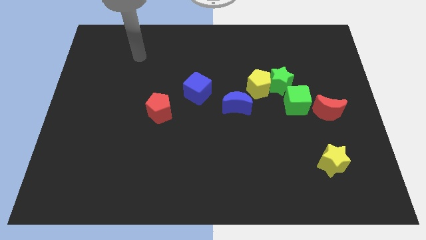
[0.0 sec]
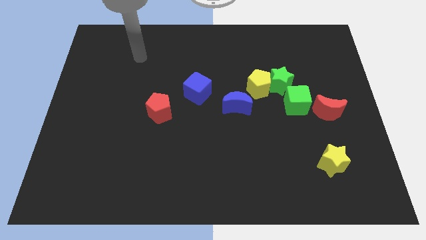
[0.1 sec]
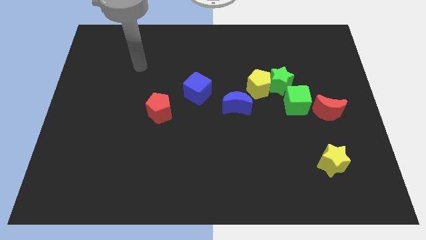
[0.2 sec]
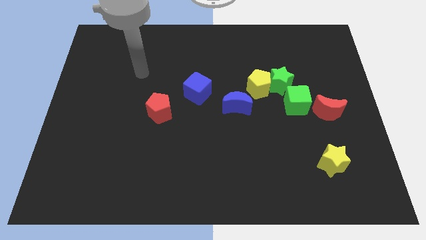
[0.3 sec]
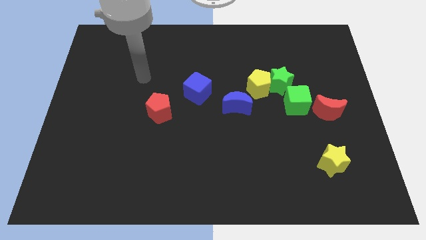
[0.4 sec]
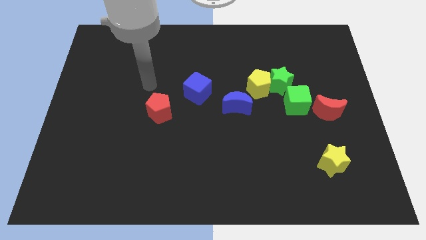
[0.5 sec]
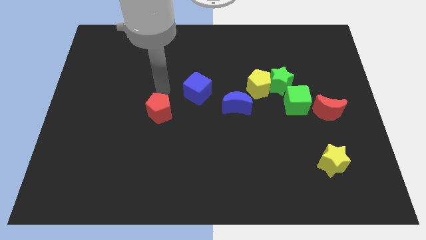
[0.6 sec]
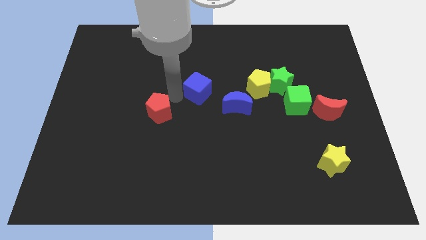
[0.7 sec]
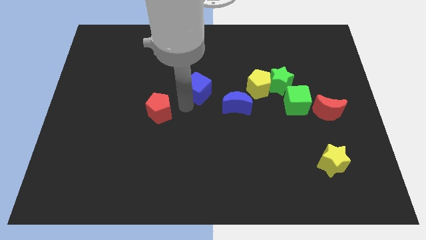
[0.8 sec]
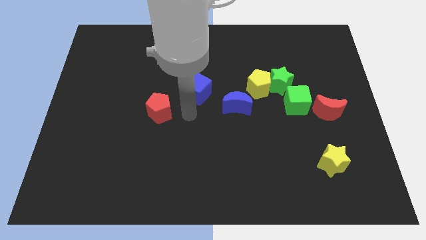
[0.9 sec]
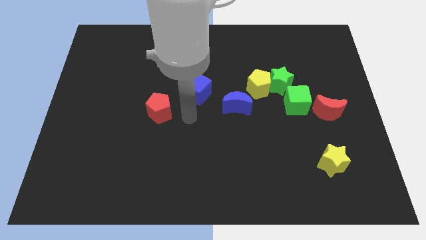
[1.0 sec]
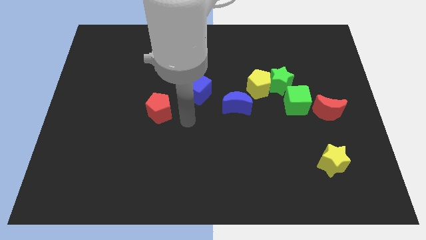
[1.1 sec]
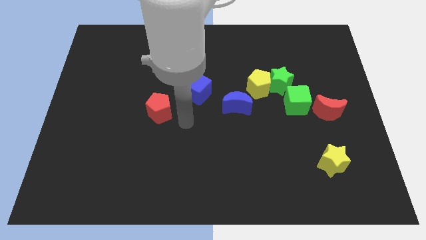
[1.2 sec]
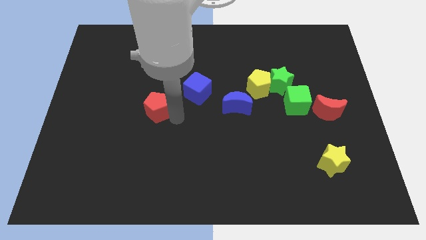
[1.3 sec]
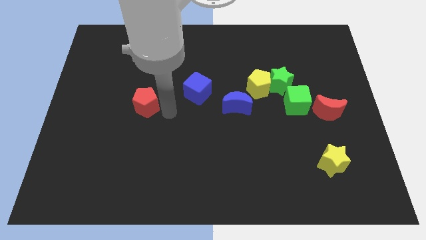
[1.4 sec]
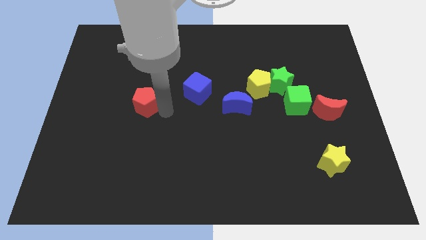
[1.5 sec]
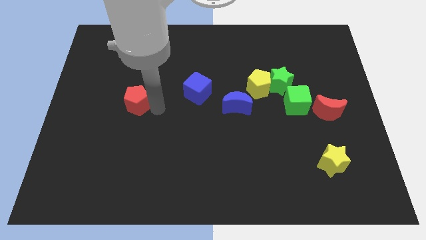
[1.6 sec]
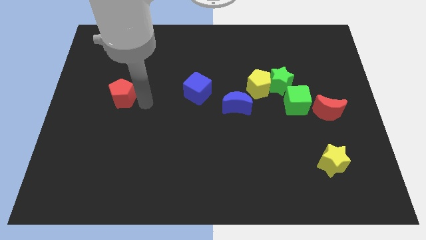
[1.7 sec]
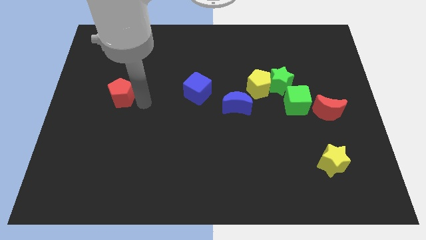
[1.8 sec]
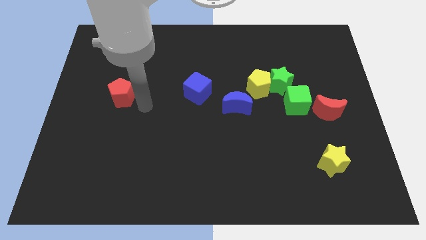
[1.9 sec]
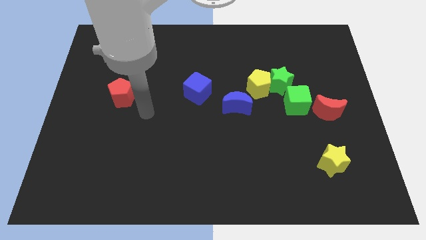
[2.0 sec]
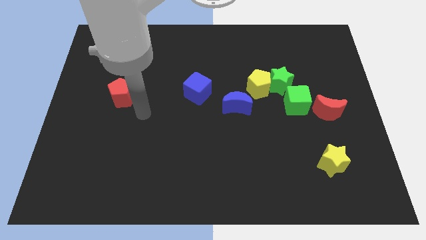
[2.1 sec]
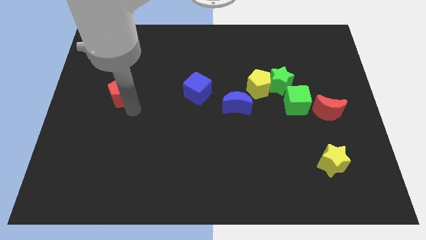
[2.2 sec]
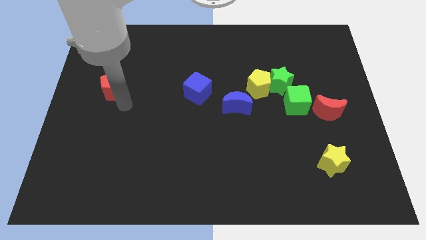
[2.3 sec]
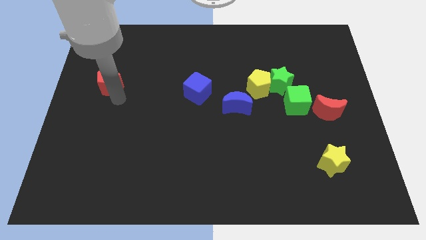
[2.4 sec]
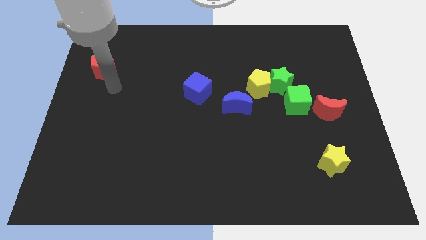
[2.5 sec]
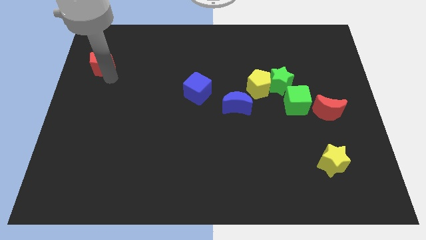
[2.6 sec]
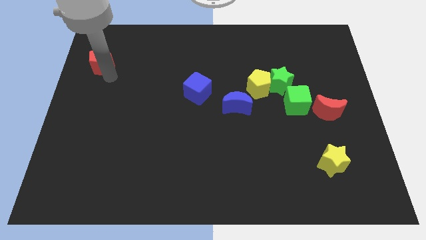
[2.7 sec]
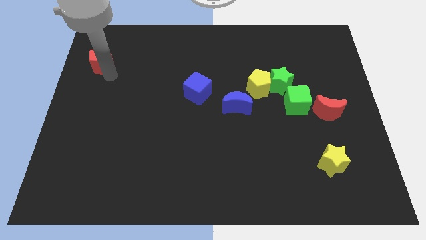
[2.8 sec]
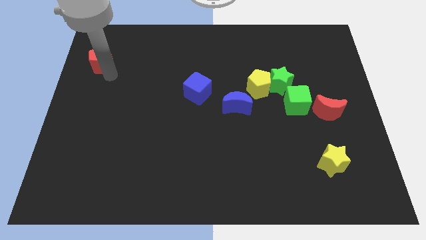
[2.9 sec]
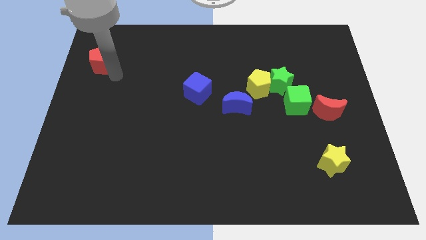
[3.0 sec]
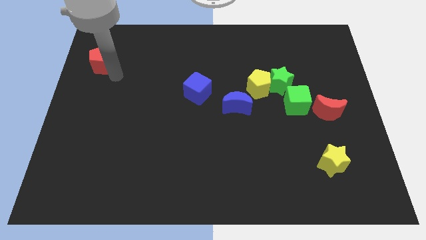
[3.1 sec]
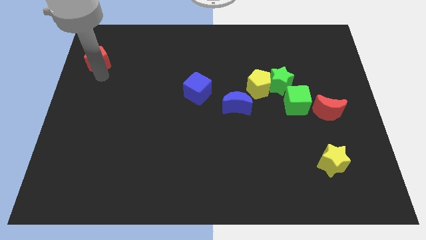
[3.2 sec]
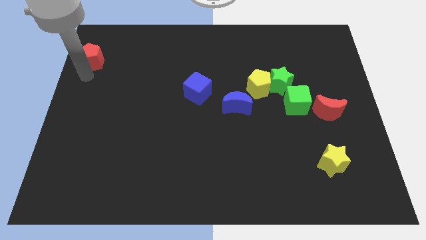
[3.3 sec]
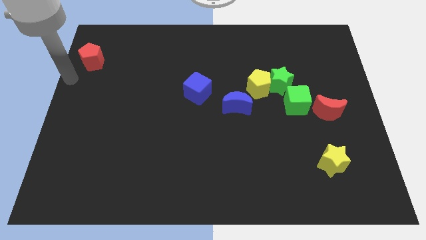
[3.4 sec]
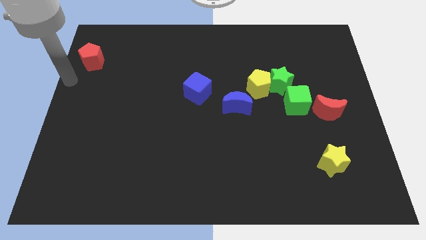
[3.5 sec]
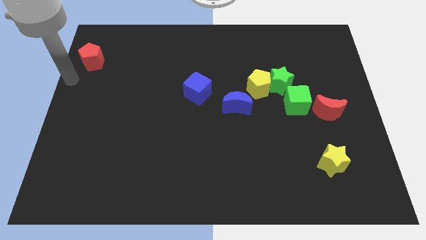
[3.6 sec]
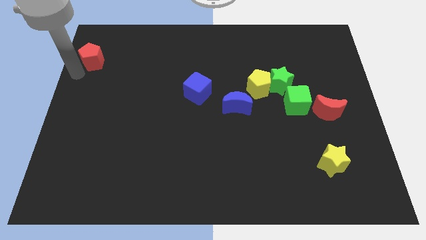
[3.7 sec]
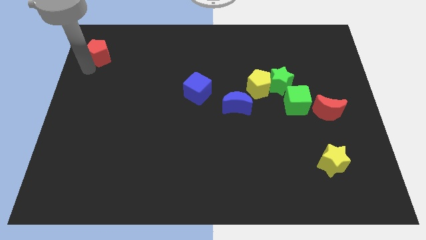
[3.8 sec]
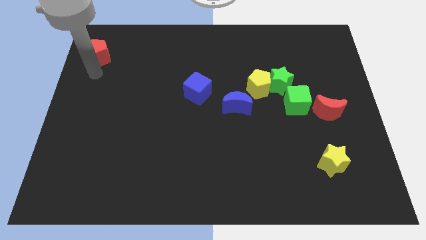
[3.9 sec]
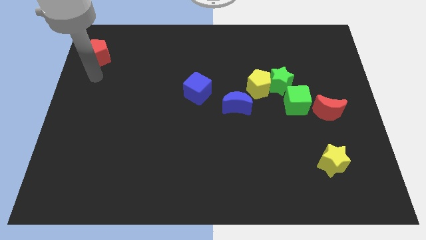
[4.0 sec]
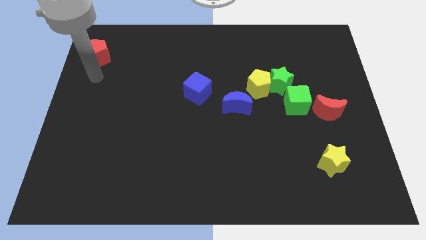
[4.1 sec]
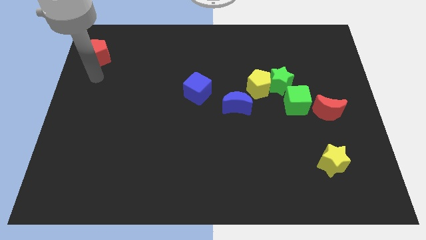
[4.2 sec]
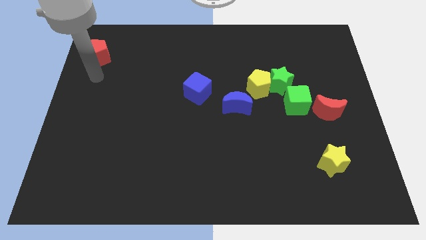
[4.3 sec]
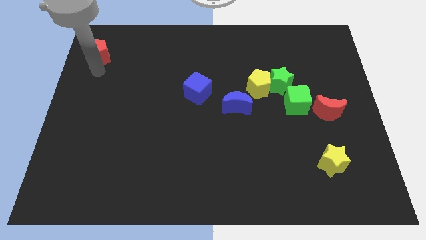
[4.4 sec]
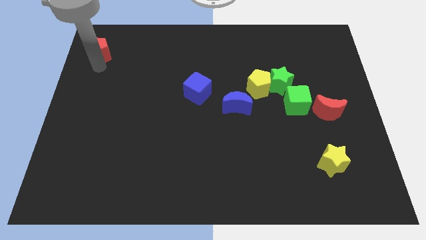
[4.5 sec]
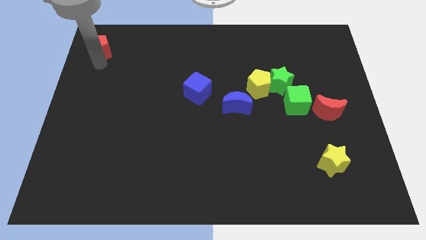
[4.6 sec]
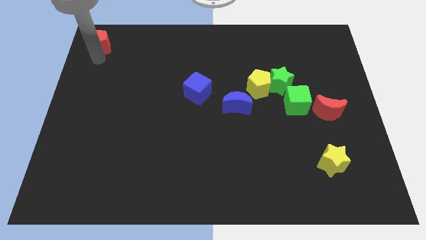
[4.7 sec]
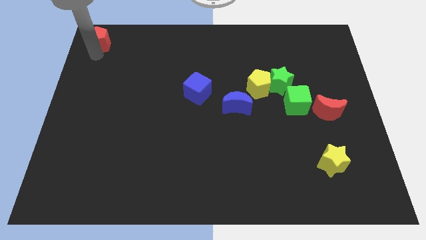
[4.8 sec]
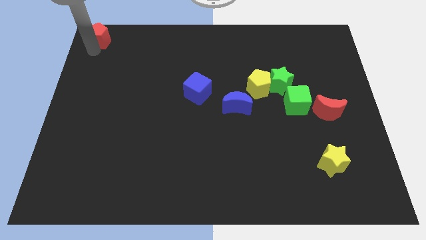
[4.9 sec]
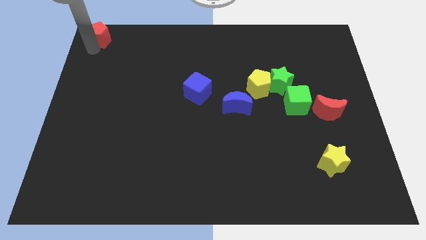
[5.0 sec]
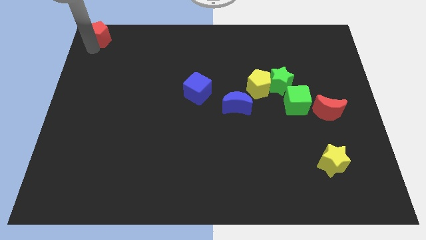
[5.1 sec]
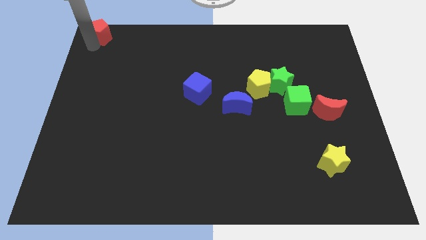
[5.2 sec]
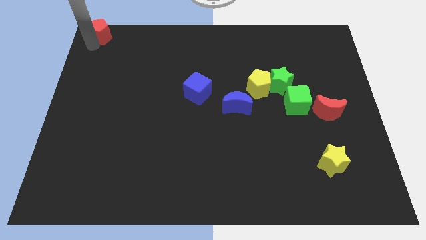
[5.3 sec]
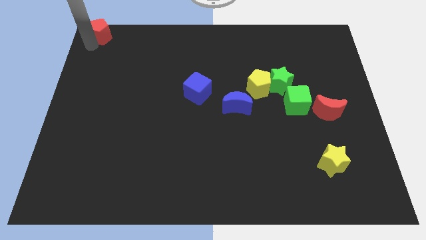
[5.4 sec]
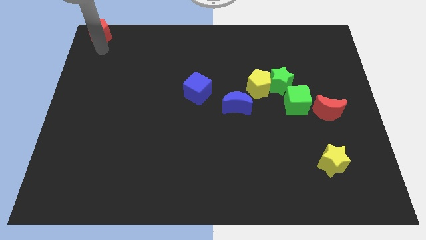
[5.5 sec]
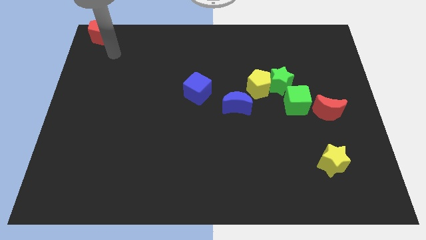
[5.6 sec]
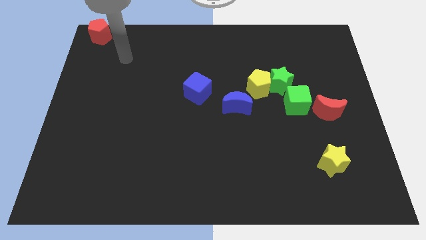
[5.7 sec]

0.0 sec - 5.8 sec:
move the red pentagon to the top left corner

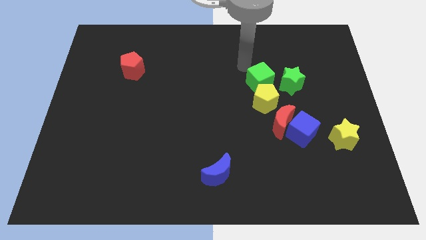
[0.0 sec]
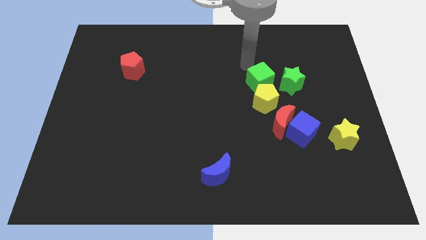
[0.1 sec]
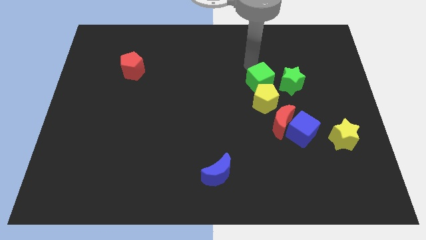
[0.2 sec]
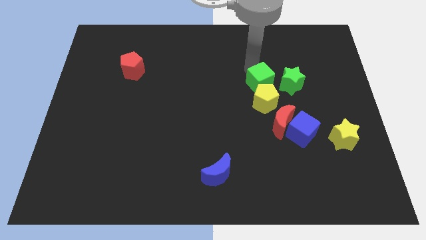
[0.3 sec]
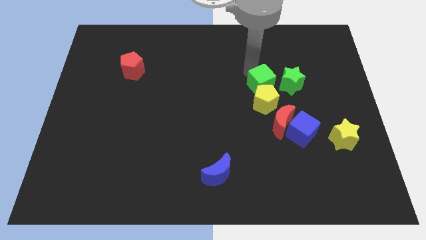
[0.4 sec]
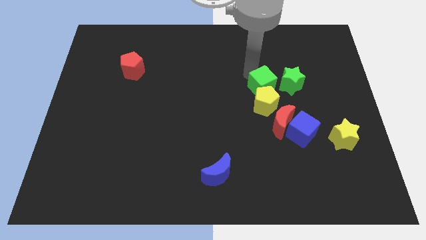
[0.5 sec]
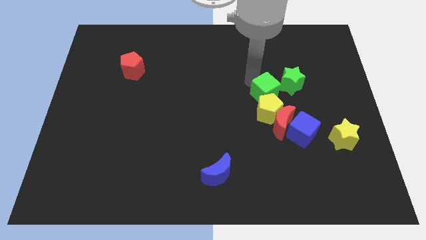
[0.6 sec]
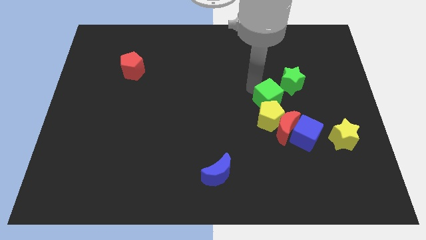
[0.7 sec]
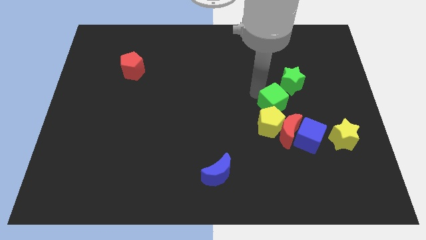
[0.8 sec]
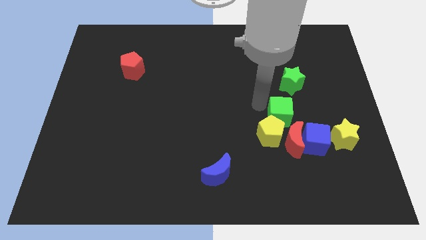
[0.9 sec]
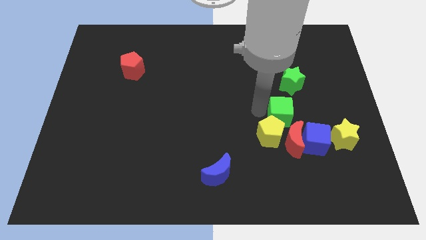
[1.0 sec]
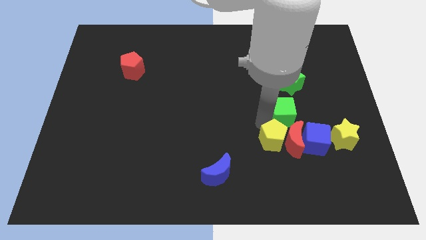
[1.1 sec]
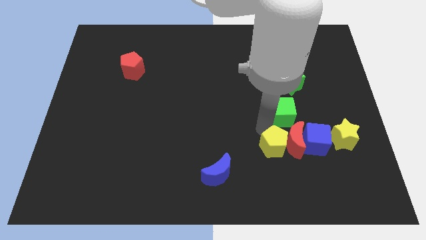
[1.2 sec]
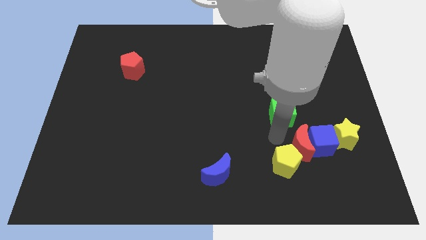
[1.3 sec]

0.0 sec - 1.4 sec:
push the green cube into the yellow pentagon

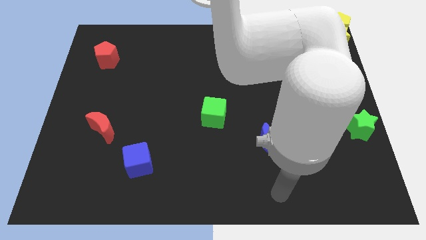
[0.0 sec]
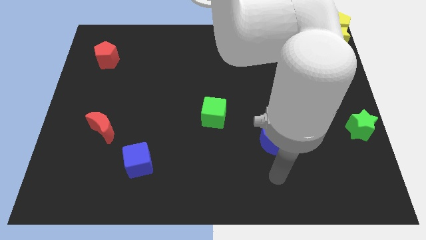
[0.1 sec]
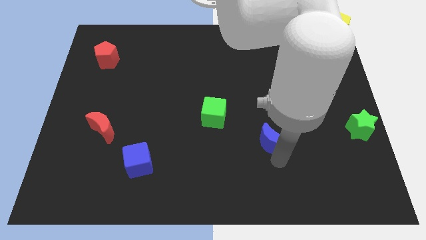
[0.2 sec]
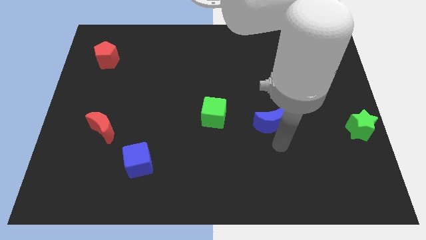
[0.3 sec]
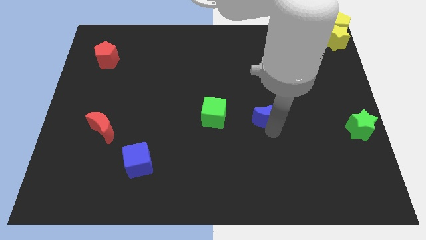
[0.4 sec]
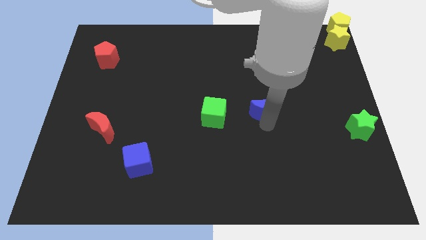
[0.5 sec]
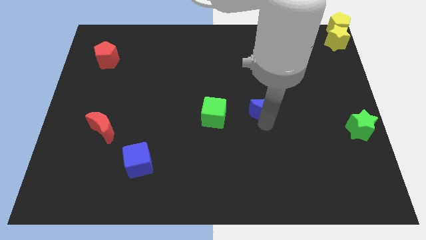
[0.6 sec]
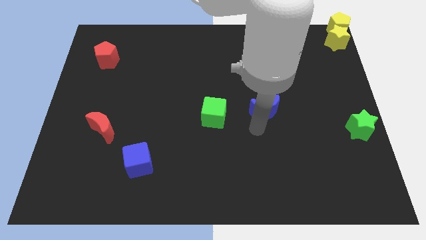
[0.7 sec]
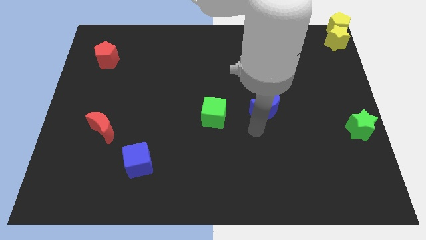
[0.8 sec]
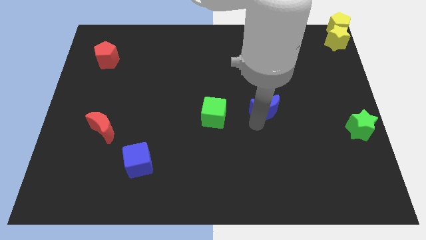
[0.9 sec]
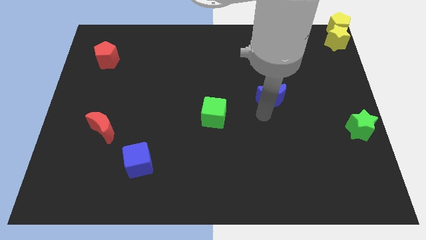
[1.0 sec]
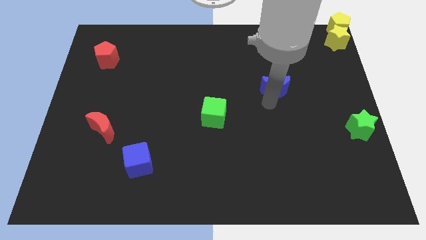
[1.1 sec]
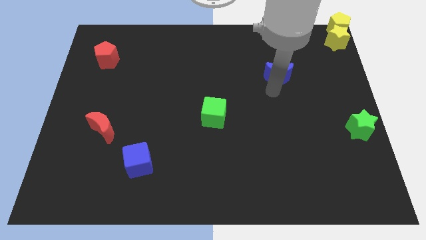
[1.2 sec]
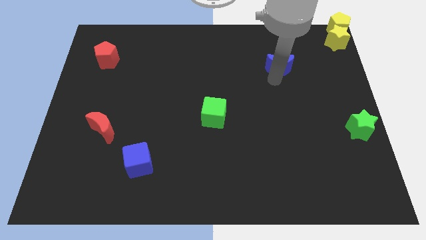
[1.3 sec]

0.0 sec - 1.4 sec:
place the blue crescent diagonally on the top right green cube

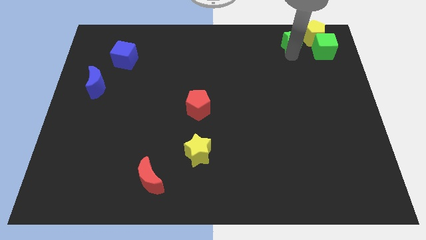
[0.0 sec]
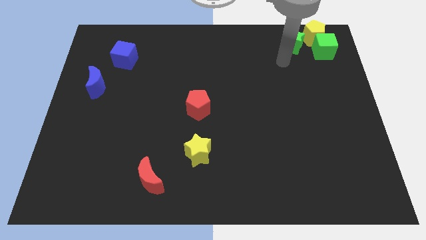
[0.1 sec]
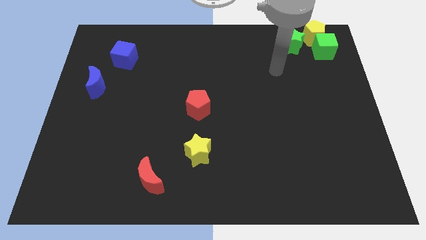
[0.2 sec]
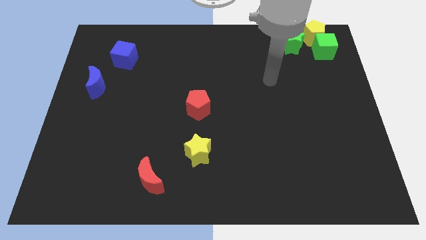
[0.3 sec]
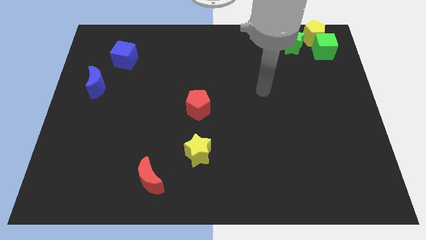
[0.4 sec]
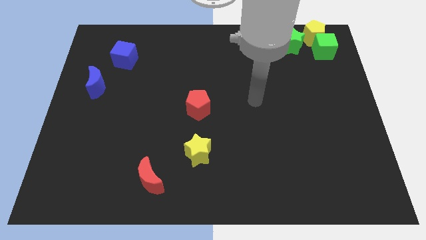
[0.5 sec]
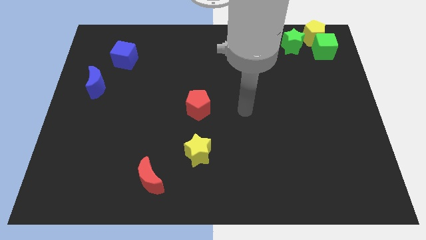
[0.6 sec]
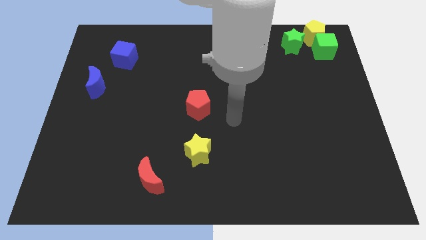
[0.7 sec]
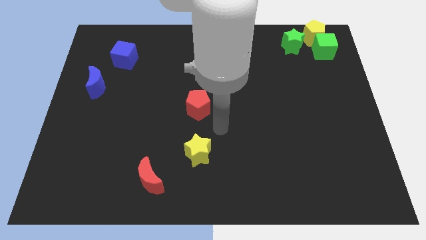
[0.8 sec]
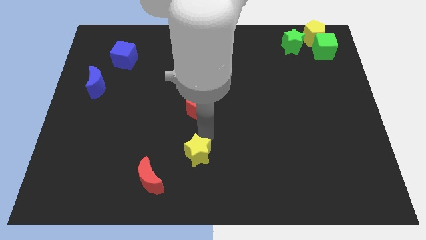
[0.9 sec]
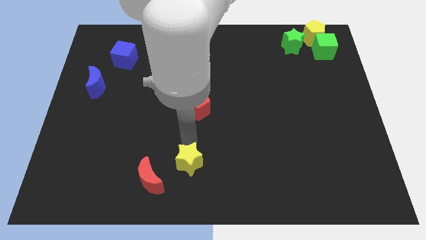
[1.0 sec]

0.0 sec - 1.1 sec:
move your hand towards the yellow star
